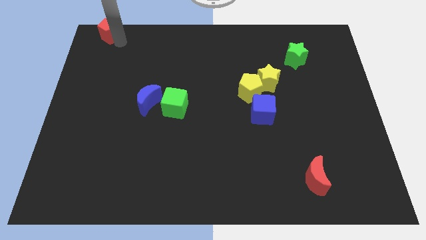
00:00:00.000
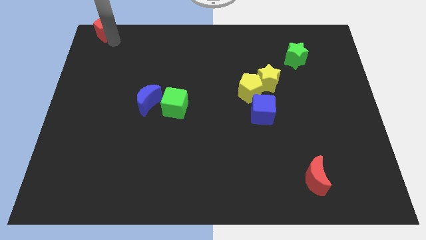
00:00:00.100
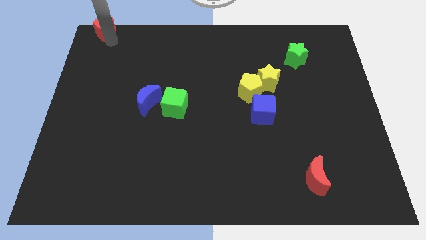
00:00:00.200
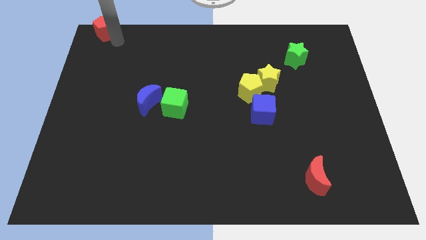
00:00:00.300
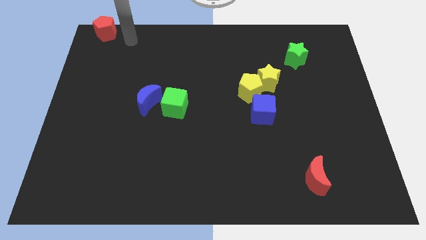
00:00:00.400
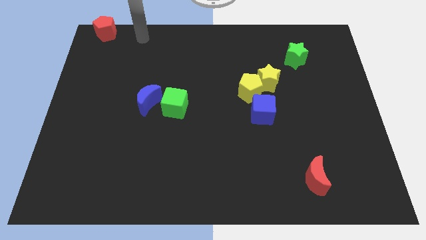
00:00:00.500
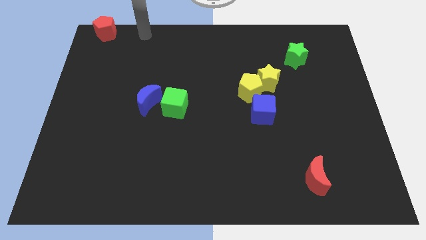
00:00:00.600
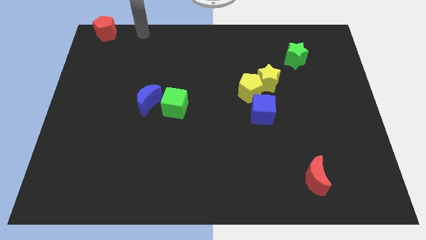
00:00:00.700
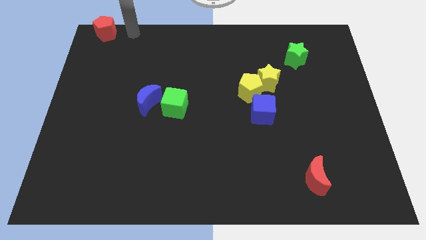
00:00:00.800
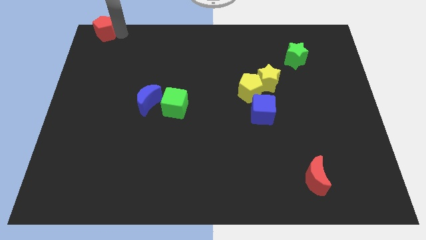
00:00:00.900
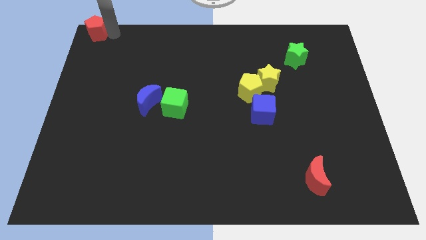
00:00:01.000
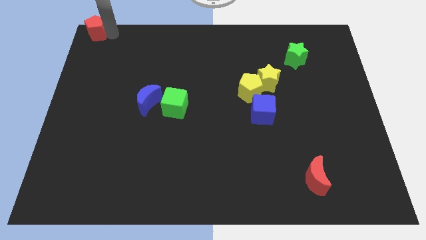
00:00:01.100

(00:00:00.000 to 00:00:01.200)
move the red pentagon to the top left corner of the board

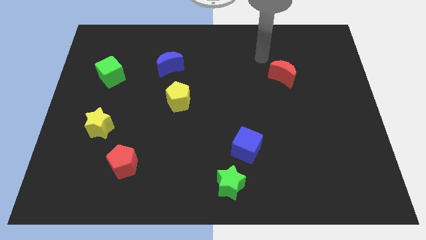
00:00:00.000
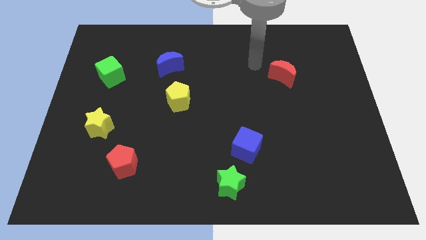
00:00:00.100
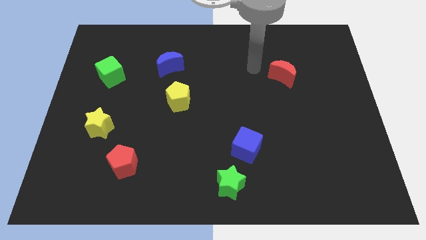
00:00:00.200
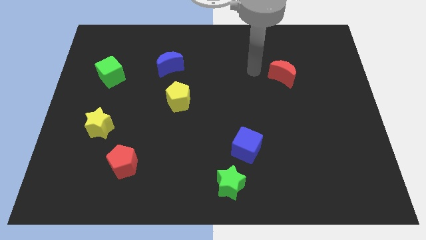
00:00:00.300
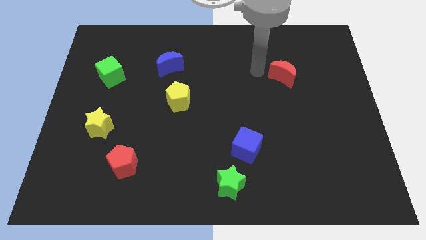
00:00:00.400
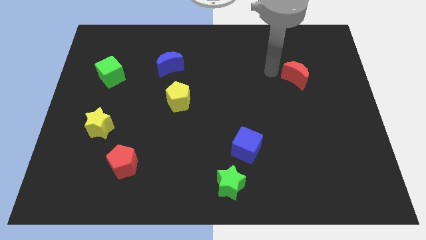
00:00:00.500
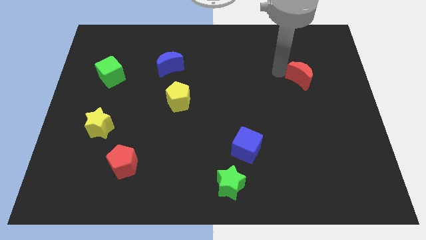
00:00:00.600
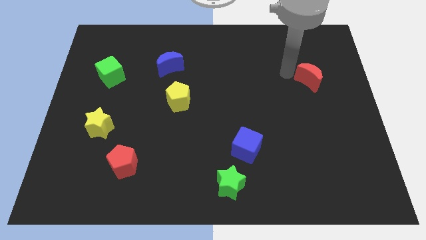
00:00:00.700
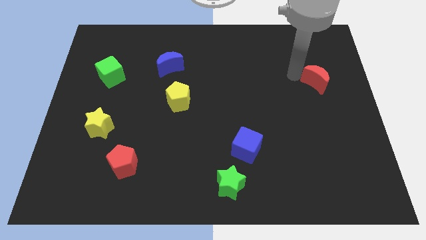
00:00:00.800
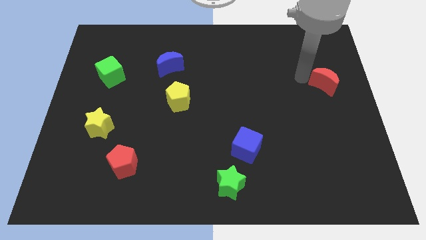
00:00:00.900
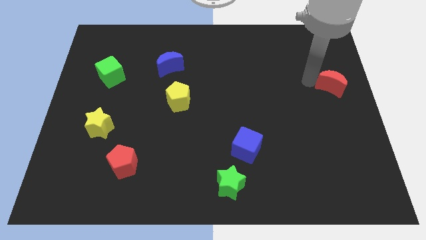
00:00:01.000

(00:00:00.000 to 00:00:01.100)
push the red moon to the center right

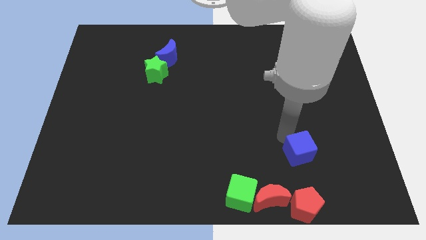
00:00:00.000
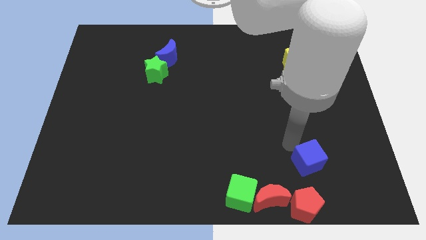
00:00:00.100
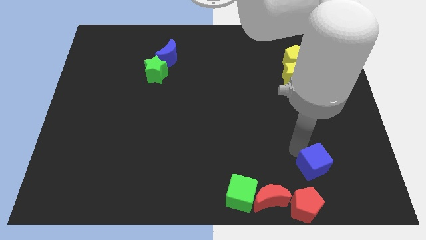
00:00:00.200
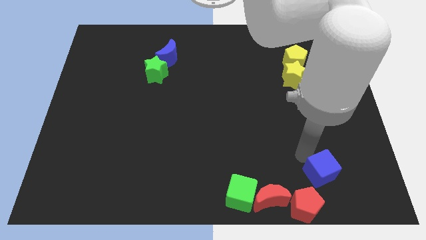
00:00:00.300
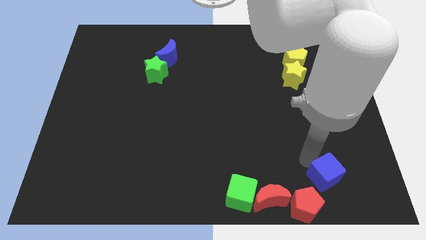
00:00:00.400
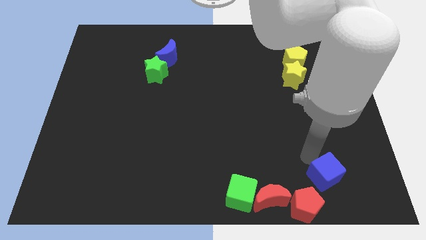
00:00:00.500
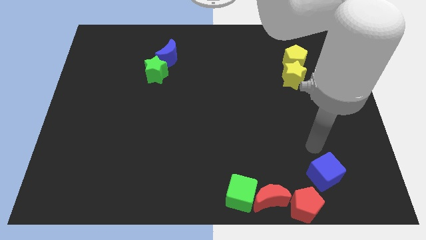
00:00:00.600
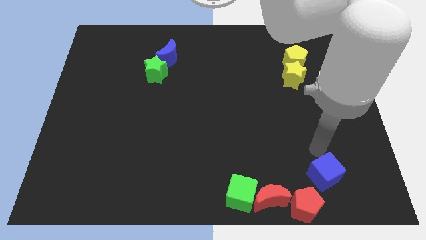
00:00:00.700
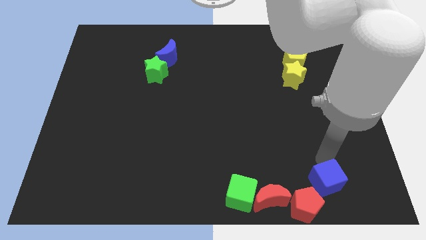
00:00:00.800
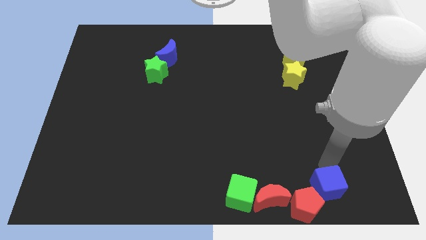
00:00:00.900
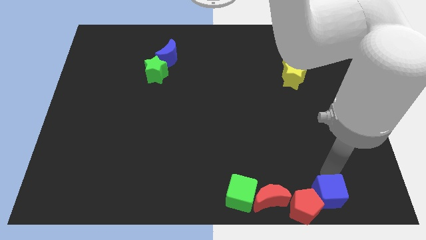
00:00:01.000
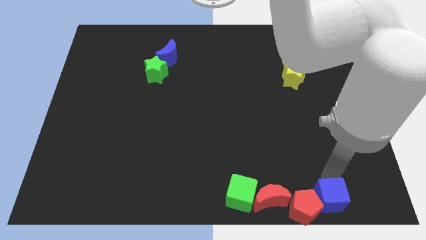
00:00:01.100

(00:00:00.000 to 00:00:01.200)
move the blue cube right to the red pentagon

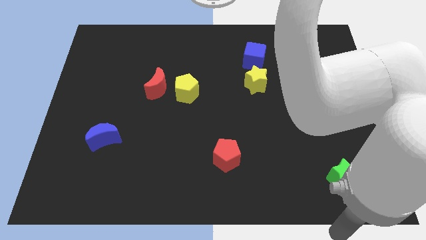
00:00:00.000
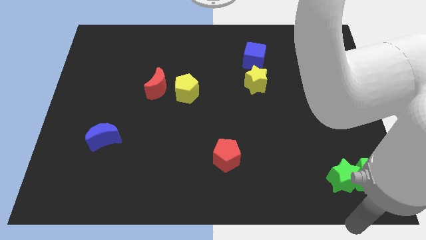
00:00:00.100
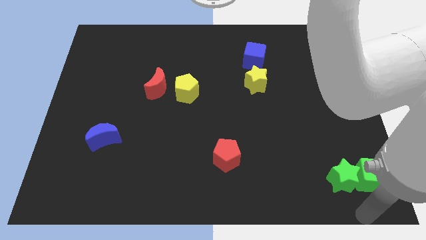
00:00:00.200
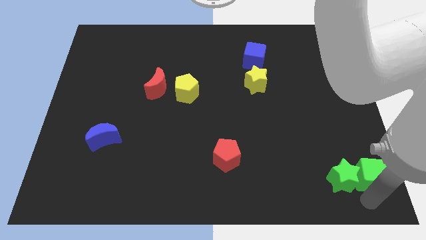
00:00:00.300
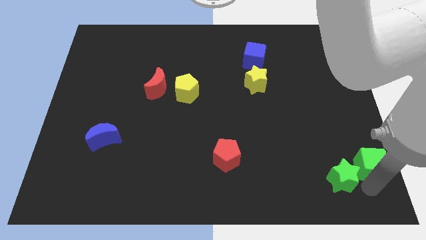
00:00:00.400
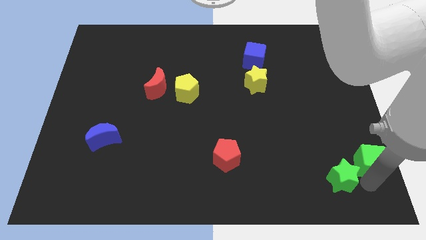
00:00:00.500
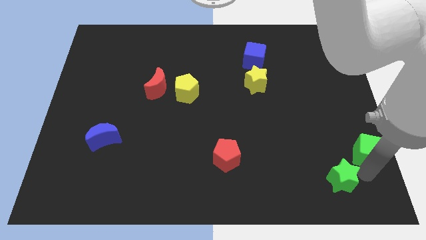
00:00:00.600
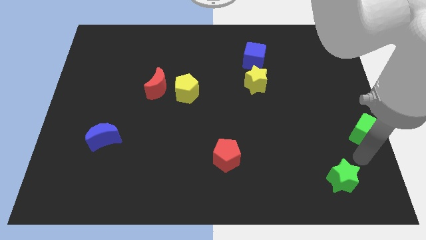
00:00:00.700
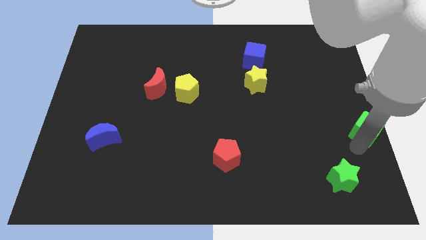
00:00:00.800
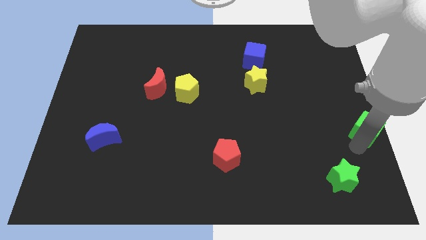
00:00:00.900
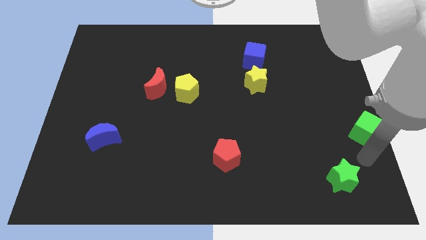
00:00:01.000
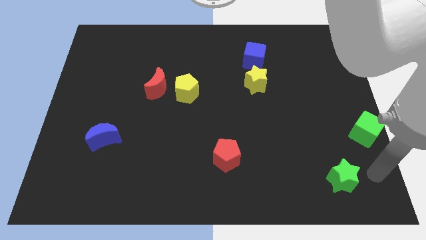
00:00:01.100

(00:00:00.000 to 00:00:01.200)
separate green cube from green star

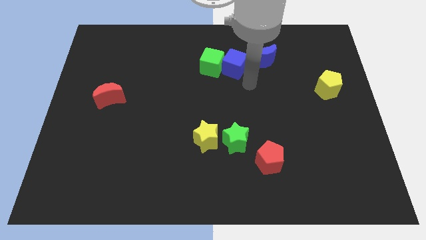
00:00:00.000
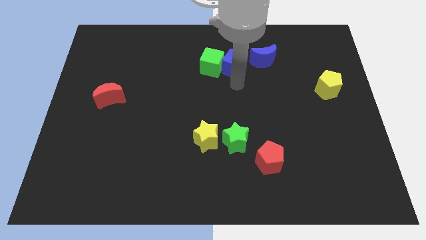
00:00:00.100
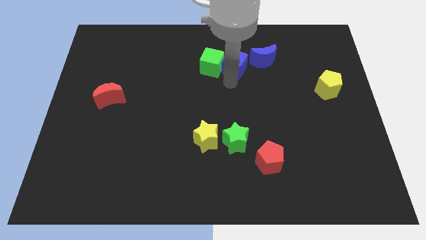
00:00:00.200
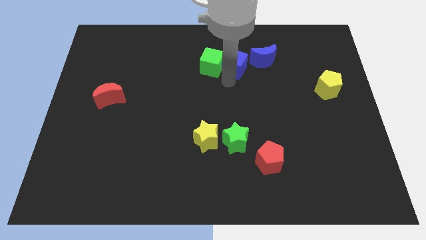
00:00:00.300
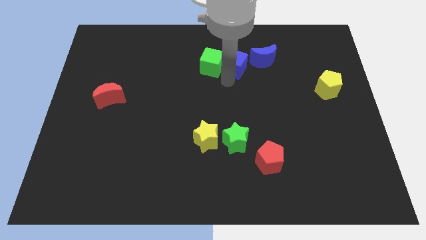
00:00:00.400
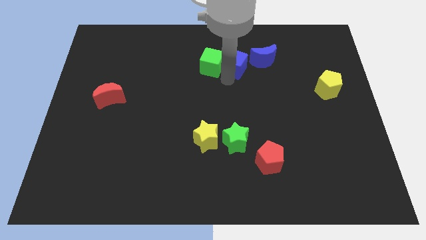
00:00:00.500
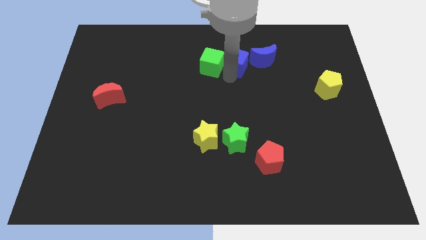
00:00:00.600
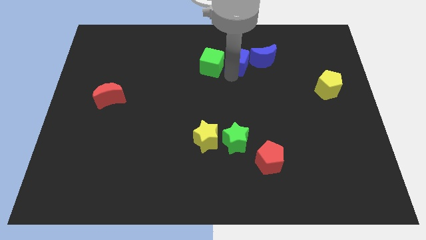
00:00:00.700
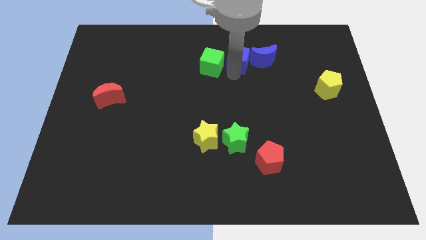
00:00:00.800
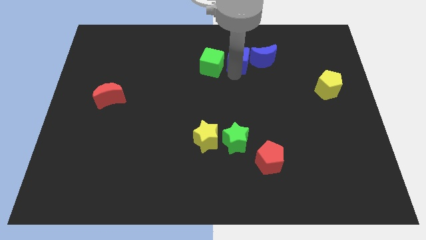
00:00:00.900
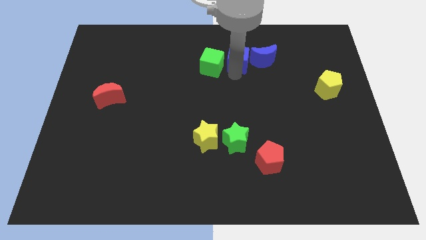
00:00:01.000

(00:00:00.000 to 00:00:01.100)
put the blue cube in between the blue crescent and the green cube

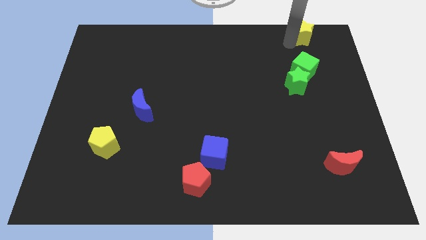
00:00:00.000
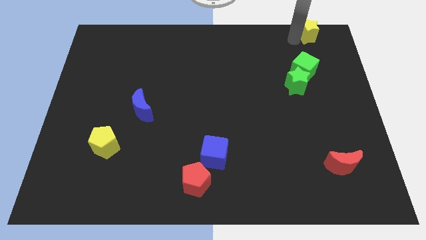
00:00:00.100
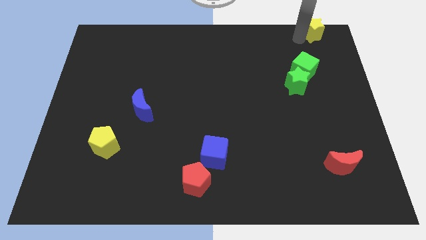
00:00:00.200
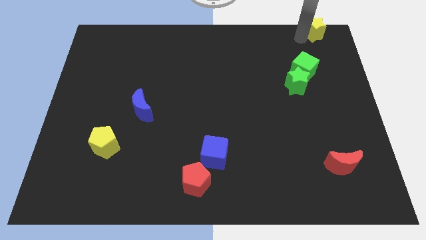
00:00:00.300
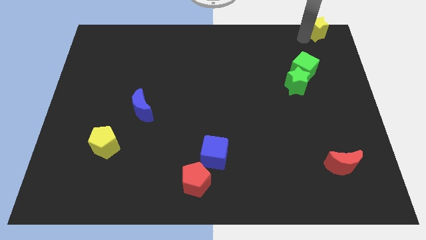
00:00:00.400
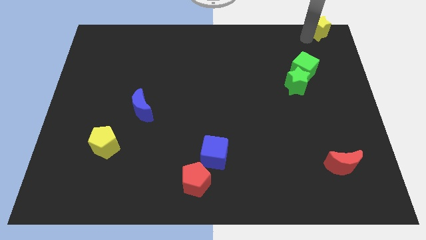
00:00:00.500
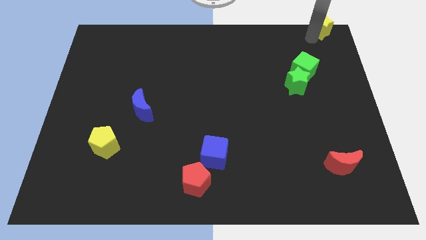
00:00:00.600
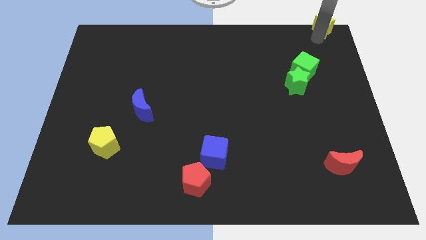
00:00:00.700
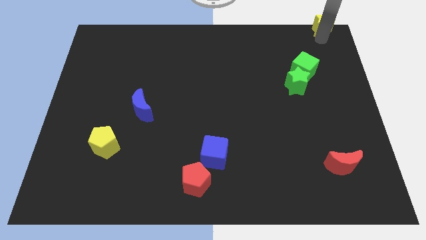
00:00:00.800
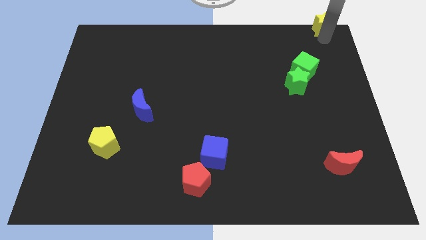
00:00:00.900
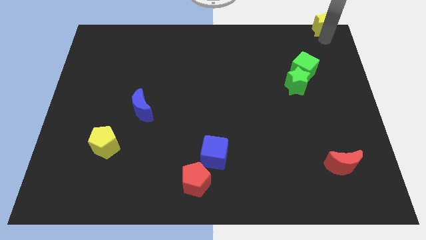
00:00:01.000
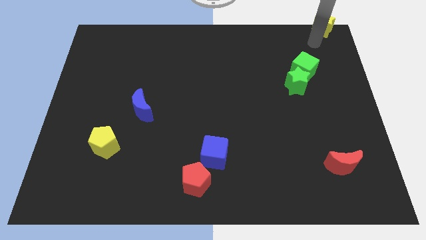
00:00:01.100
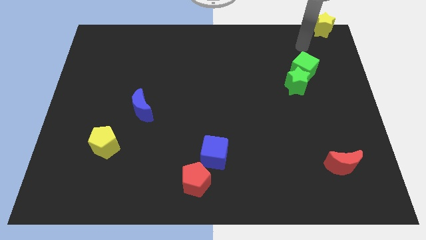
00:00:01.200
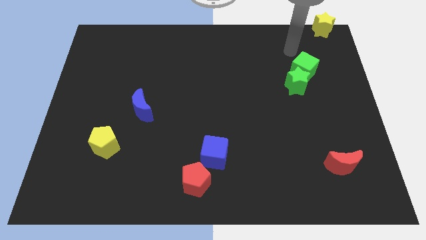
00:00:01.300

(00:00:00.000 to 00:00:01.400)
move the yellow star towards the top right

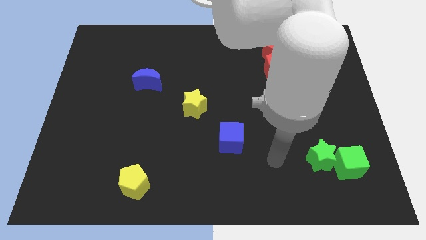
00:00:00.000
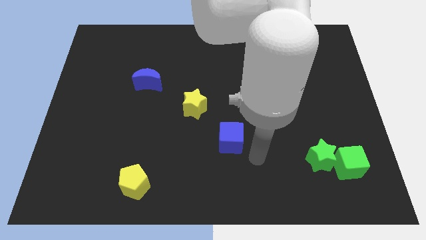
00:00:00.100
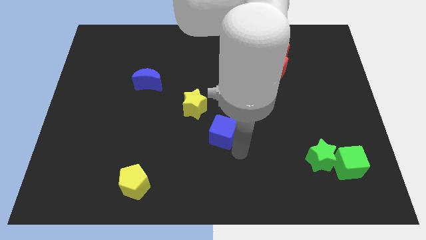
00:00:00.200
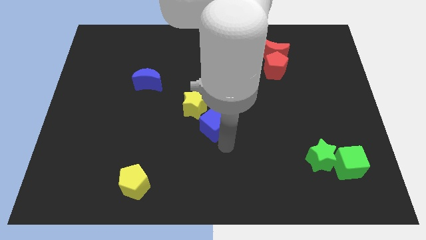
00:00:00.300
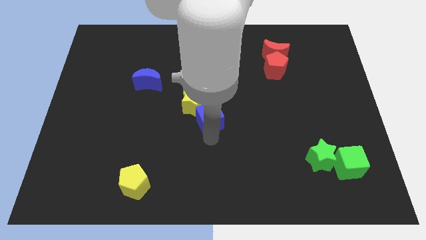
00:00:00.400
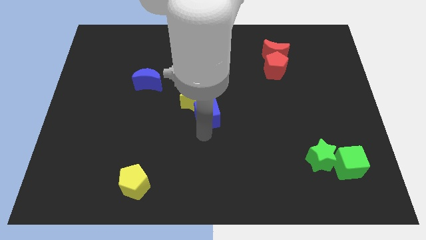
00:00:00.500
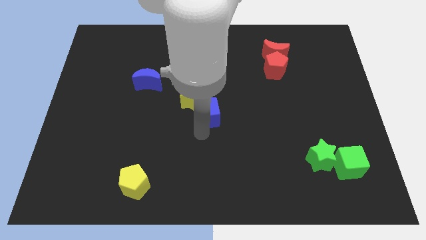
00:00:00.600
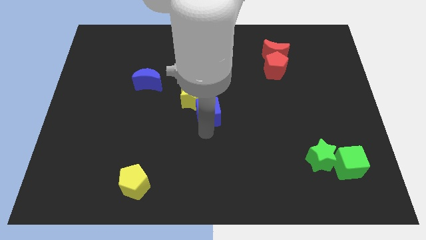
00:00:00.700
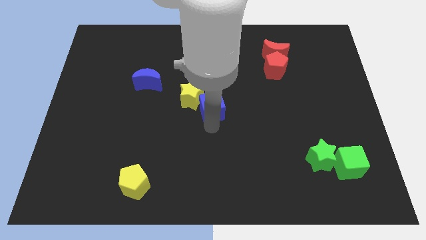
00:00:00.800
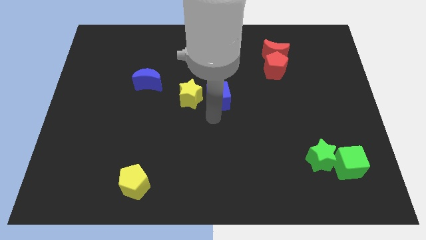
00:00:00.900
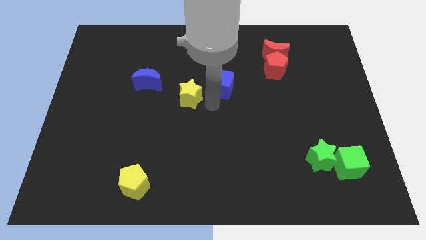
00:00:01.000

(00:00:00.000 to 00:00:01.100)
place the blue moon to the right of the yellow star

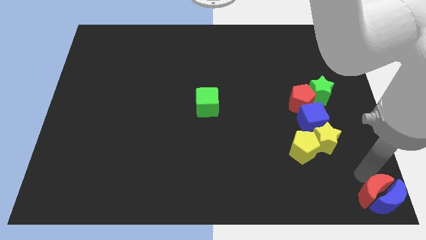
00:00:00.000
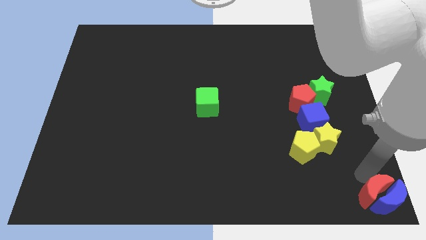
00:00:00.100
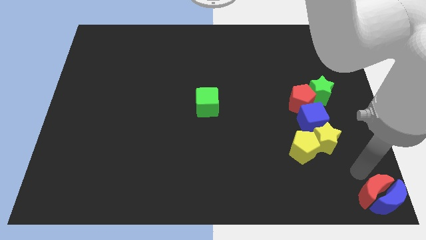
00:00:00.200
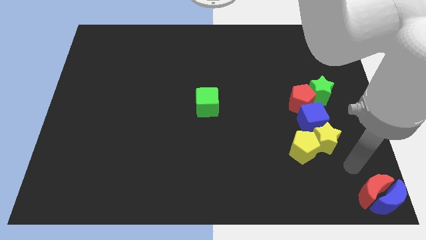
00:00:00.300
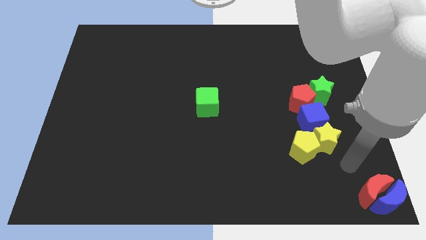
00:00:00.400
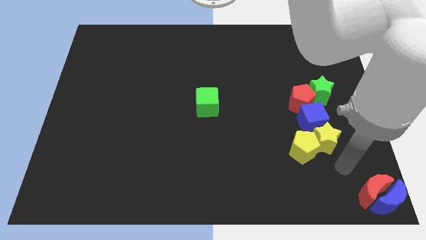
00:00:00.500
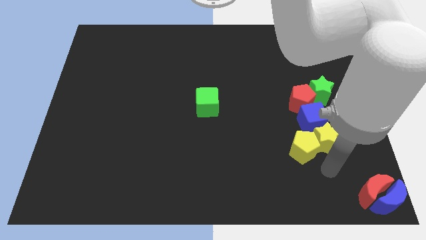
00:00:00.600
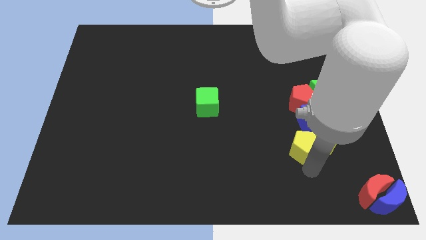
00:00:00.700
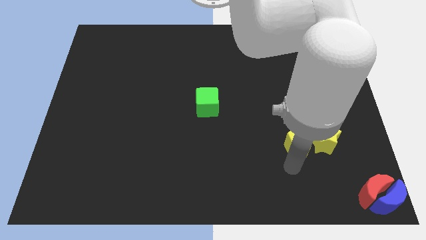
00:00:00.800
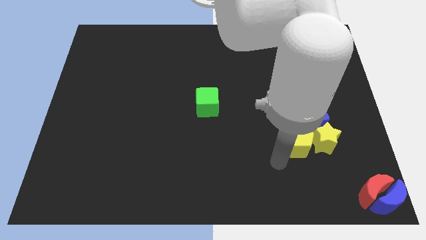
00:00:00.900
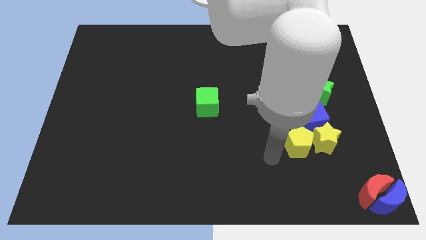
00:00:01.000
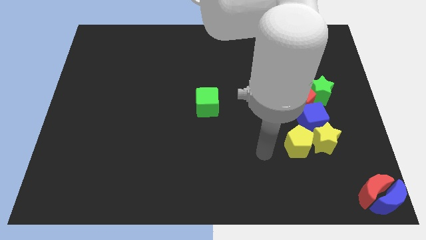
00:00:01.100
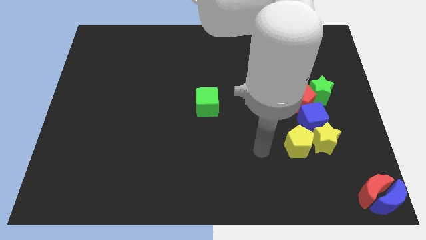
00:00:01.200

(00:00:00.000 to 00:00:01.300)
move your hand away from the red crescent
